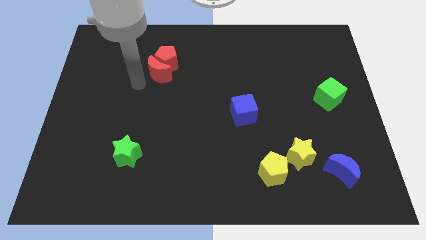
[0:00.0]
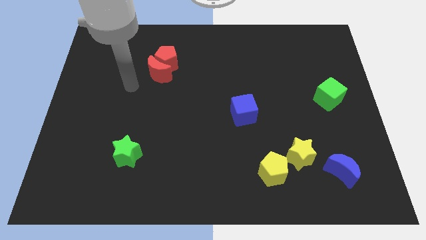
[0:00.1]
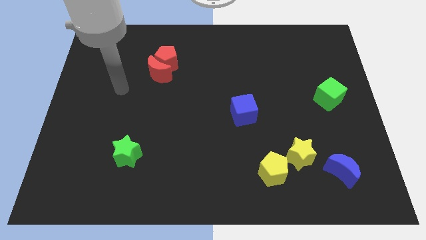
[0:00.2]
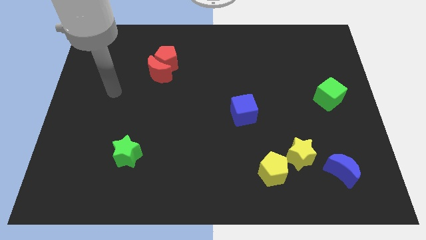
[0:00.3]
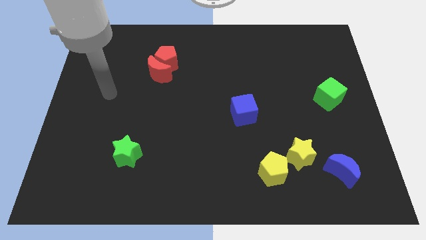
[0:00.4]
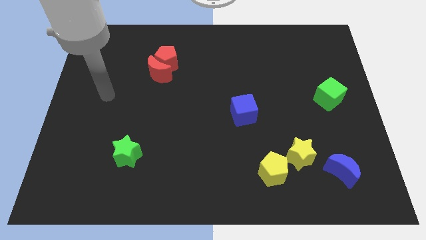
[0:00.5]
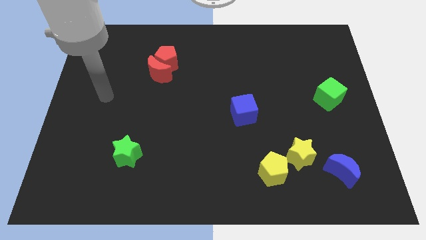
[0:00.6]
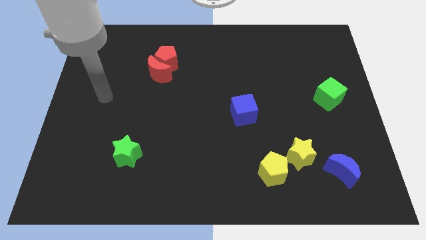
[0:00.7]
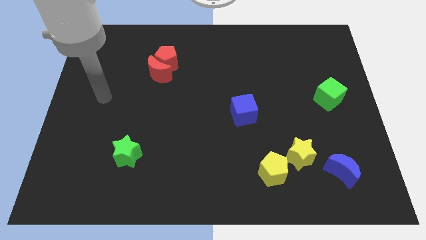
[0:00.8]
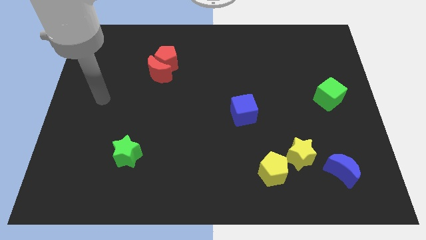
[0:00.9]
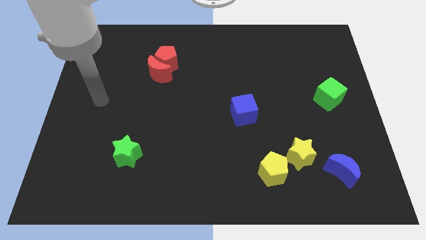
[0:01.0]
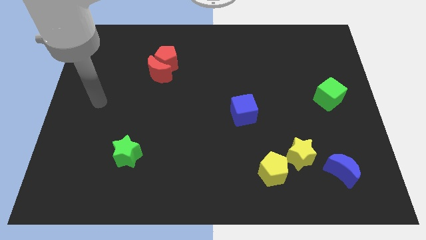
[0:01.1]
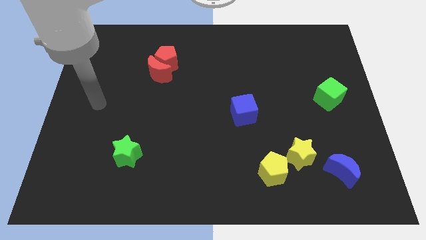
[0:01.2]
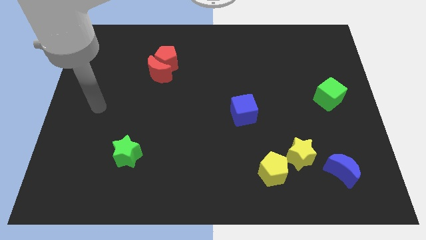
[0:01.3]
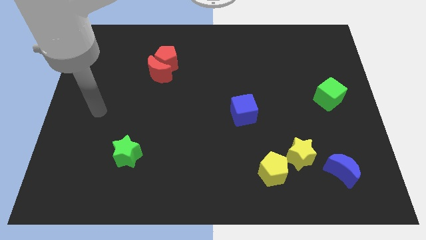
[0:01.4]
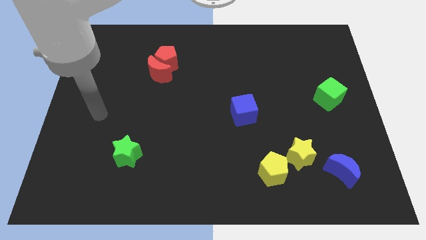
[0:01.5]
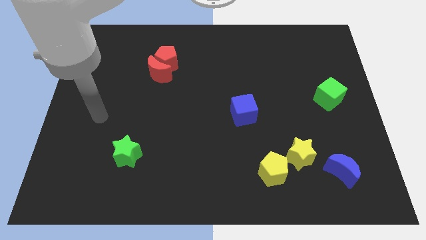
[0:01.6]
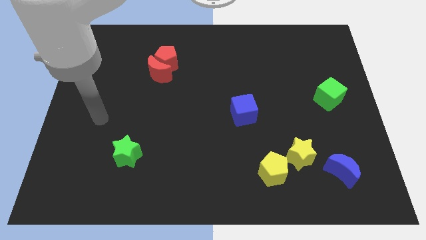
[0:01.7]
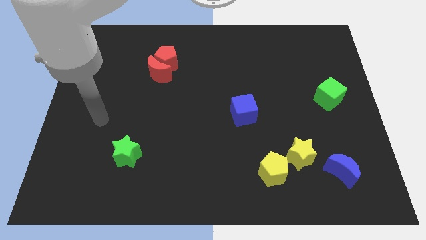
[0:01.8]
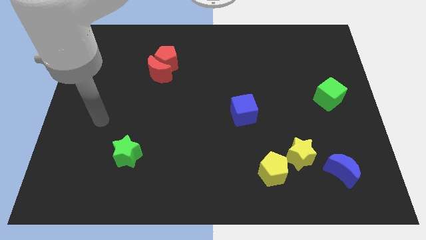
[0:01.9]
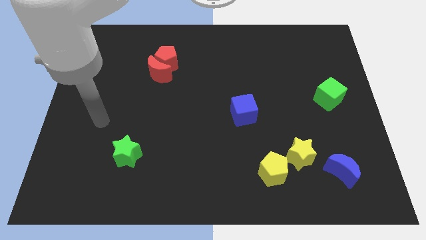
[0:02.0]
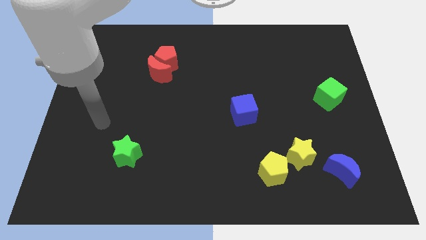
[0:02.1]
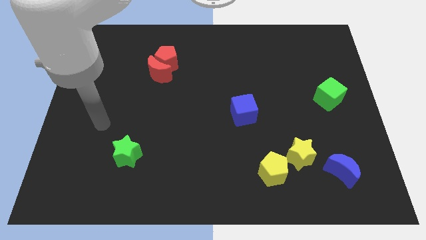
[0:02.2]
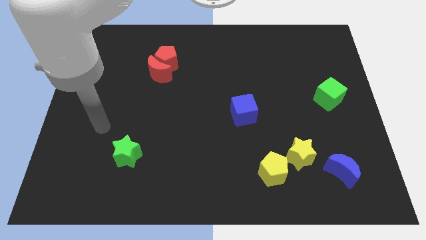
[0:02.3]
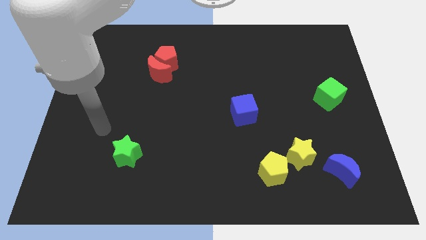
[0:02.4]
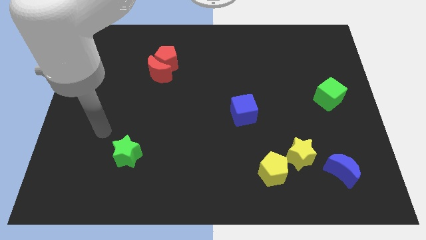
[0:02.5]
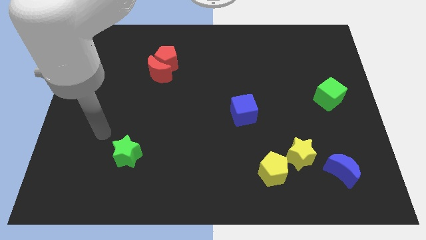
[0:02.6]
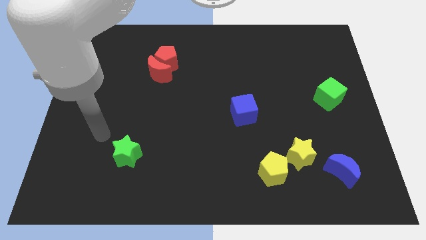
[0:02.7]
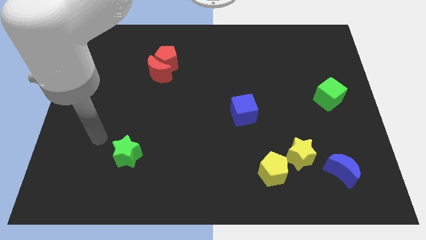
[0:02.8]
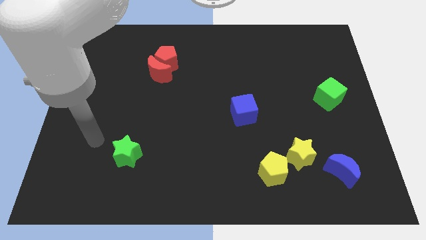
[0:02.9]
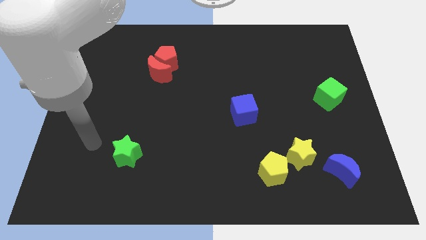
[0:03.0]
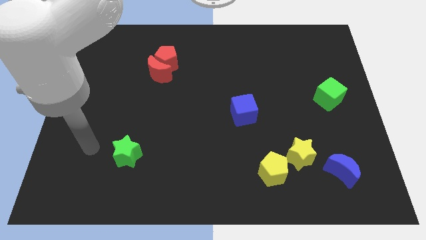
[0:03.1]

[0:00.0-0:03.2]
place your hand at left side of the green star

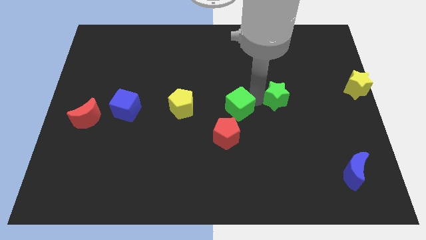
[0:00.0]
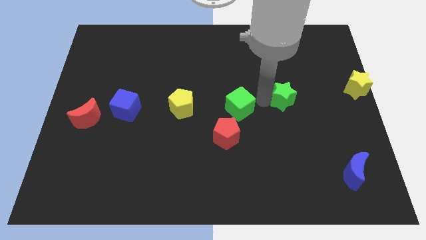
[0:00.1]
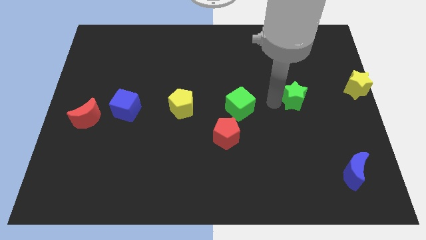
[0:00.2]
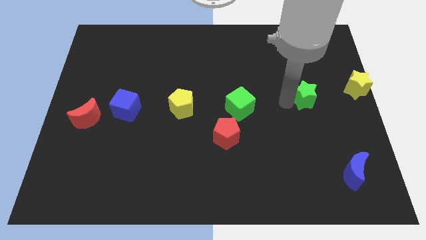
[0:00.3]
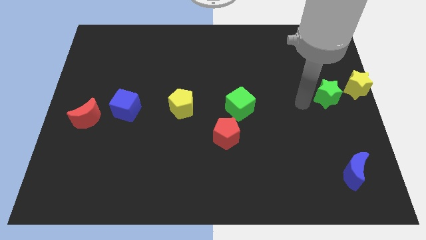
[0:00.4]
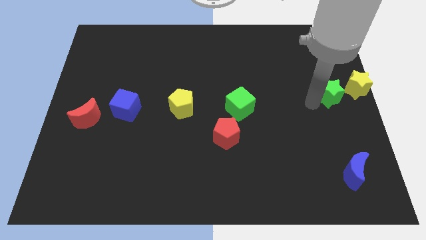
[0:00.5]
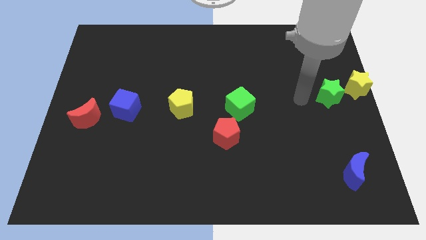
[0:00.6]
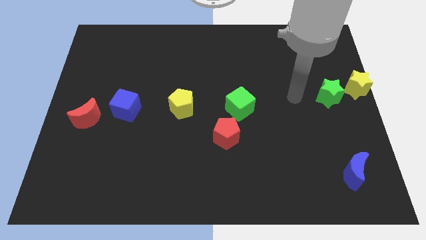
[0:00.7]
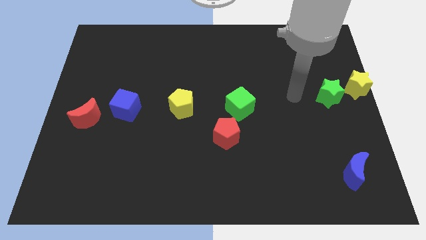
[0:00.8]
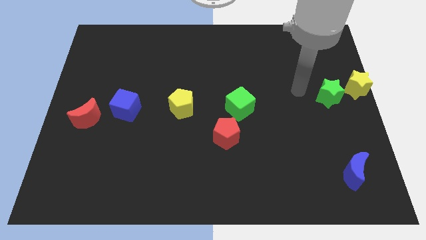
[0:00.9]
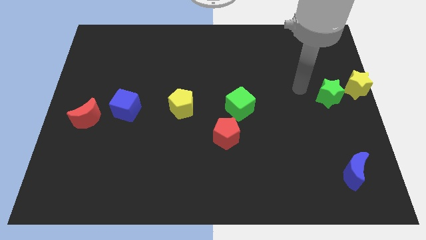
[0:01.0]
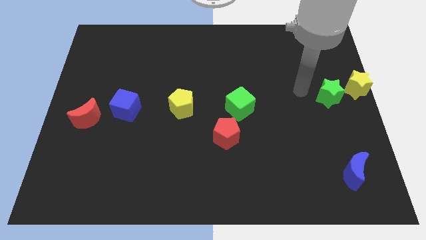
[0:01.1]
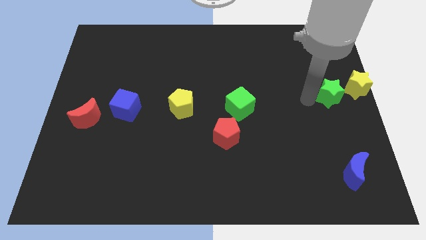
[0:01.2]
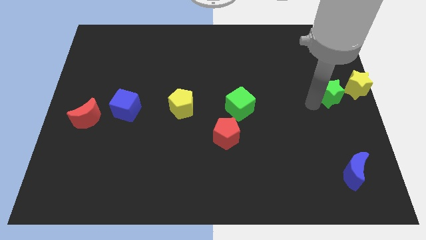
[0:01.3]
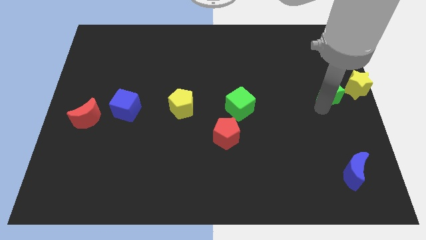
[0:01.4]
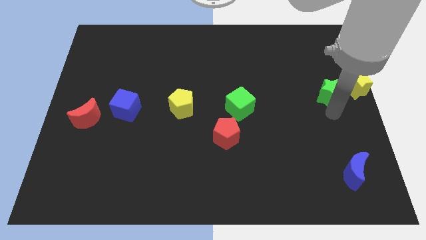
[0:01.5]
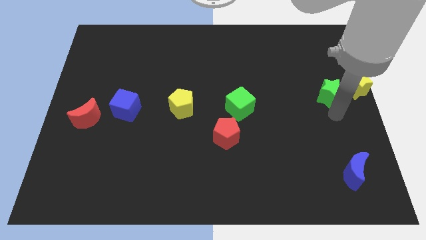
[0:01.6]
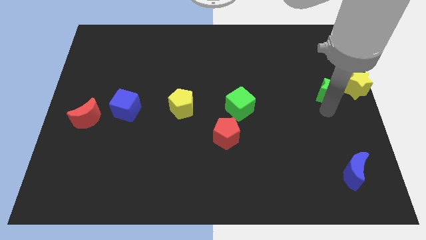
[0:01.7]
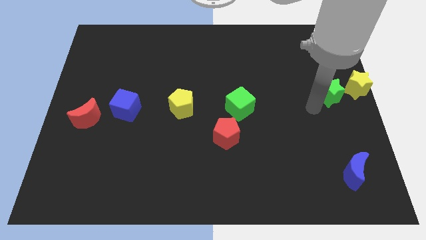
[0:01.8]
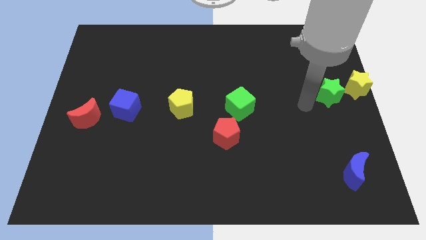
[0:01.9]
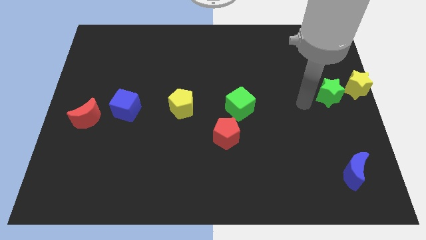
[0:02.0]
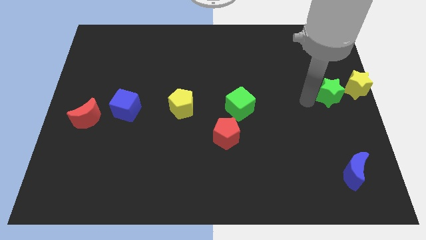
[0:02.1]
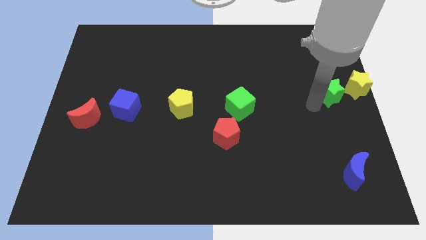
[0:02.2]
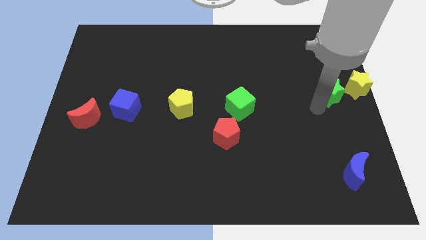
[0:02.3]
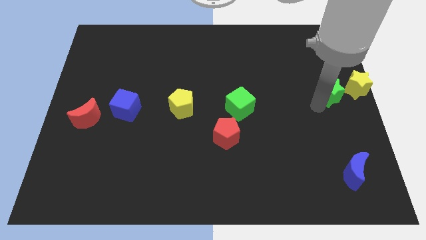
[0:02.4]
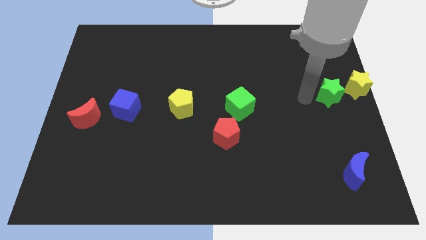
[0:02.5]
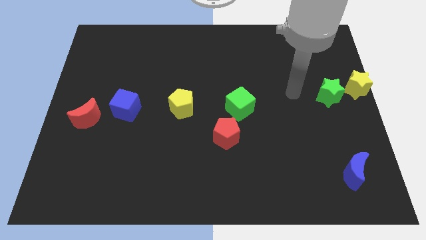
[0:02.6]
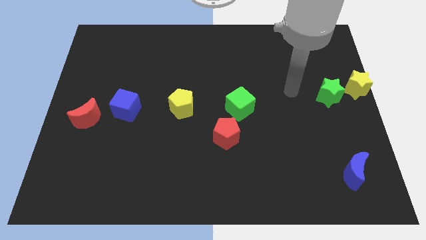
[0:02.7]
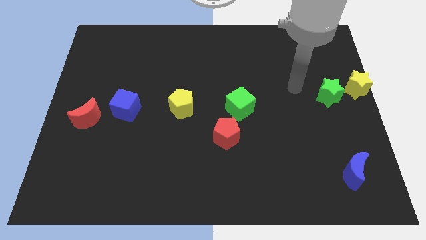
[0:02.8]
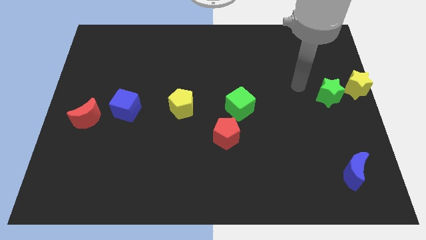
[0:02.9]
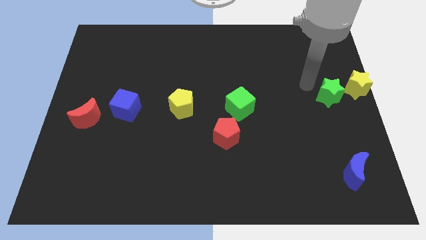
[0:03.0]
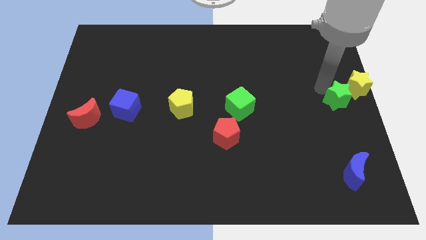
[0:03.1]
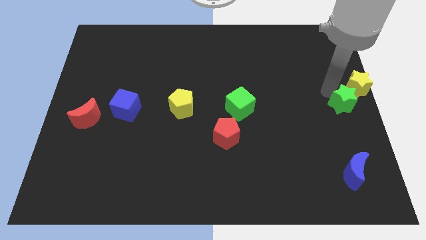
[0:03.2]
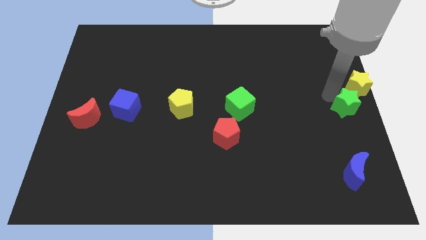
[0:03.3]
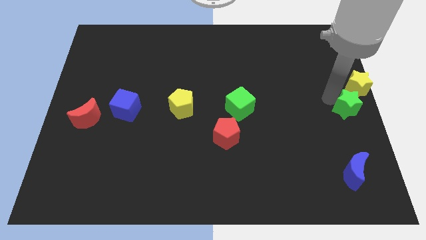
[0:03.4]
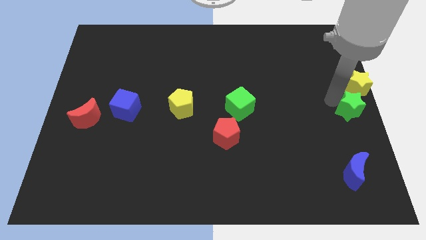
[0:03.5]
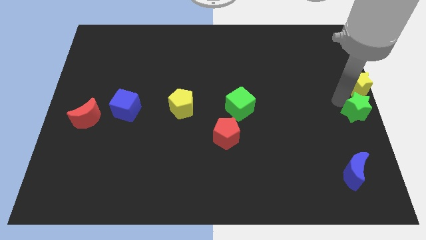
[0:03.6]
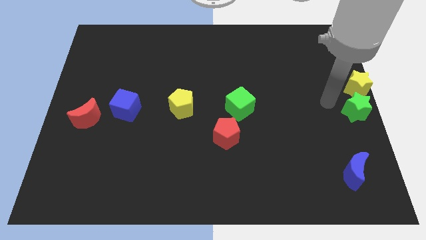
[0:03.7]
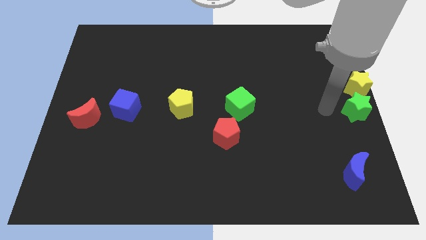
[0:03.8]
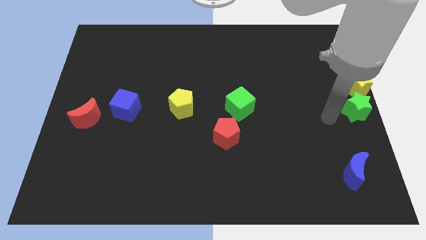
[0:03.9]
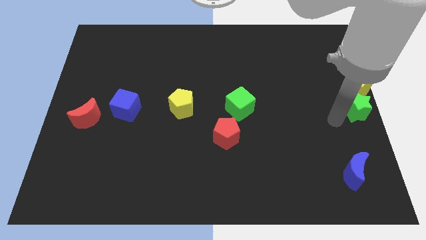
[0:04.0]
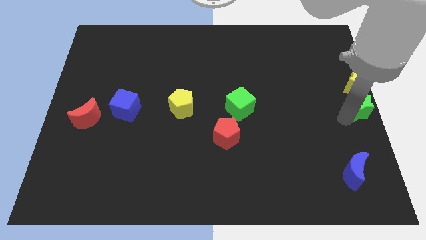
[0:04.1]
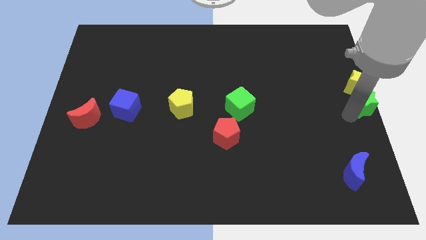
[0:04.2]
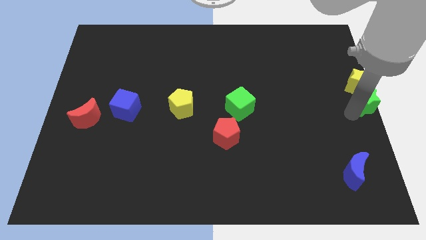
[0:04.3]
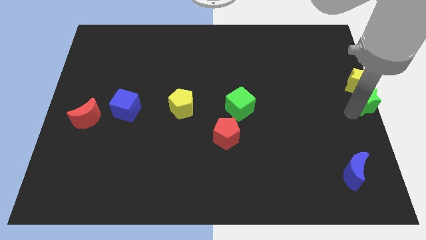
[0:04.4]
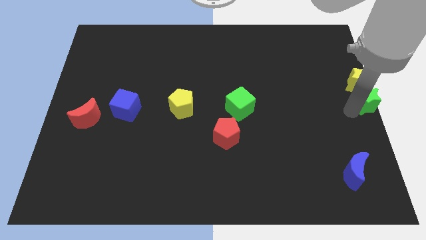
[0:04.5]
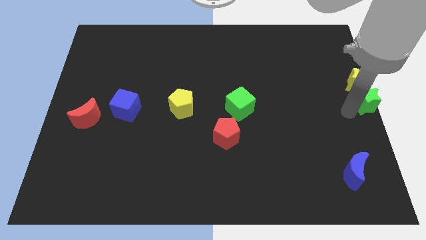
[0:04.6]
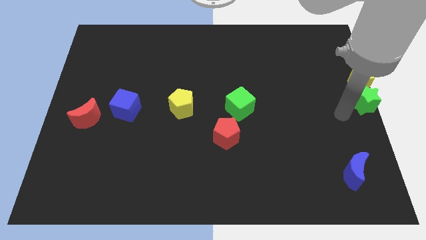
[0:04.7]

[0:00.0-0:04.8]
place the green star below the yellow star

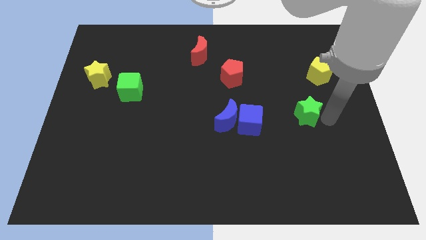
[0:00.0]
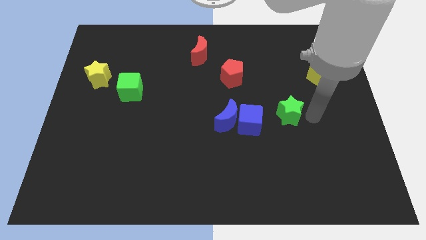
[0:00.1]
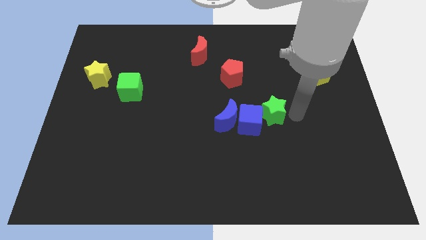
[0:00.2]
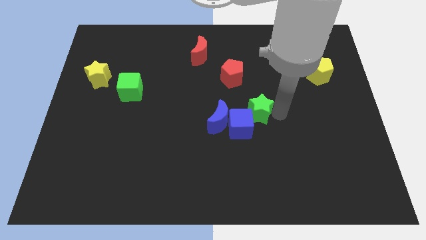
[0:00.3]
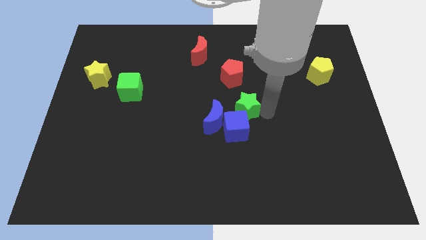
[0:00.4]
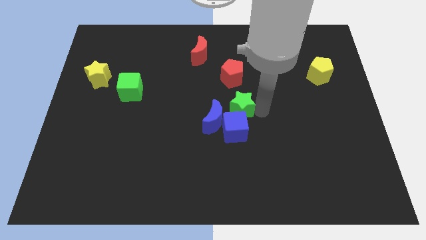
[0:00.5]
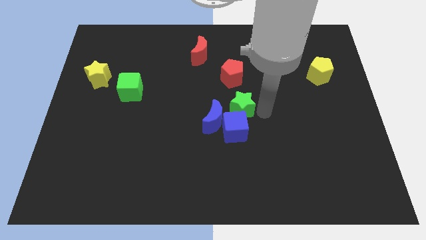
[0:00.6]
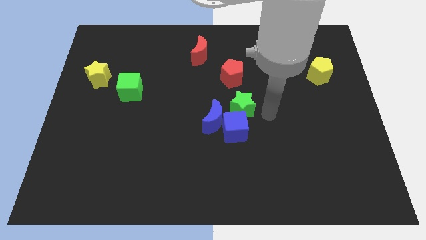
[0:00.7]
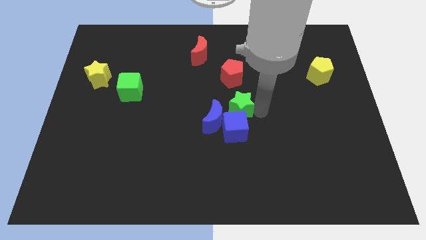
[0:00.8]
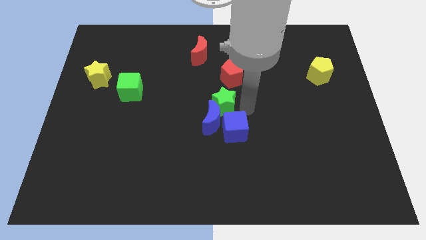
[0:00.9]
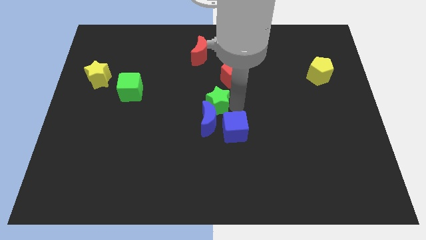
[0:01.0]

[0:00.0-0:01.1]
place the green star on top of blue crescent
